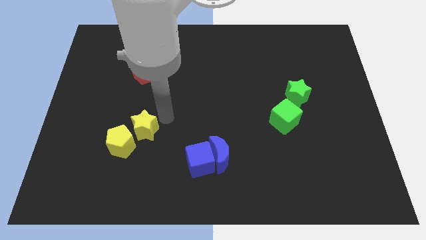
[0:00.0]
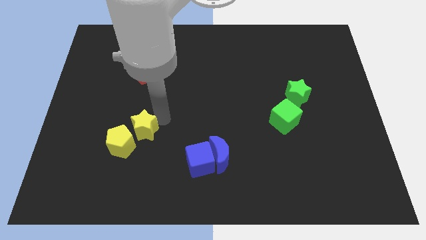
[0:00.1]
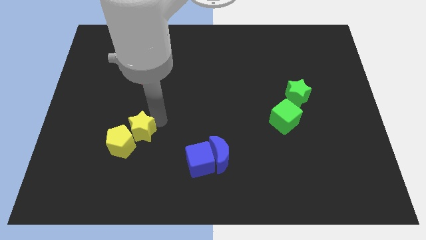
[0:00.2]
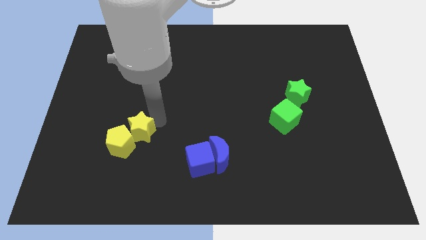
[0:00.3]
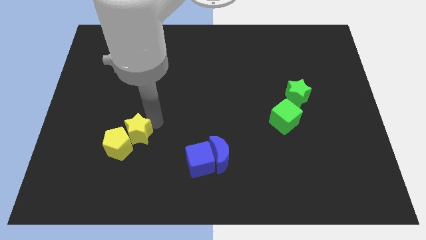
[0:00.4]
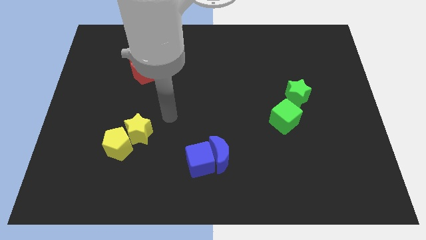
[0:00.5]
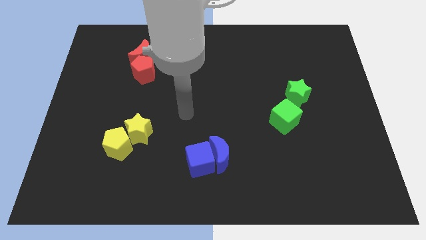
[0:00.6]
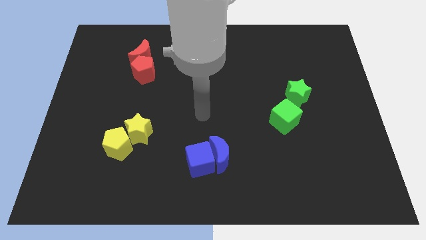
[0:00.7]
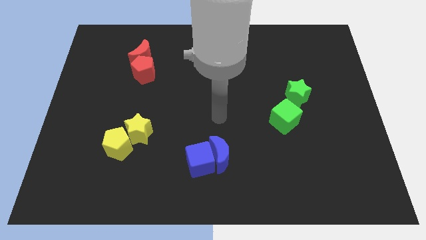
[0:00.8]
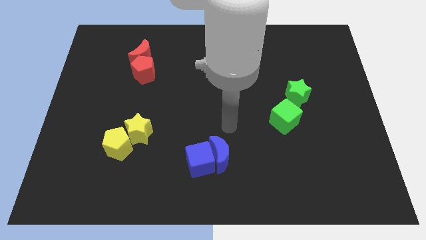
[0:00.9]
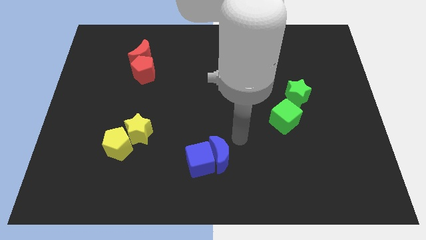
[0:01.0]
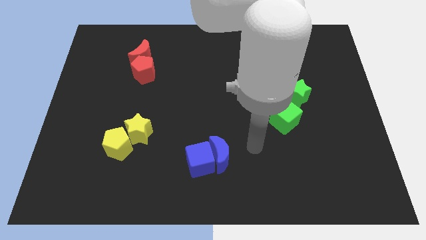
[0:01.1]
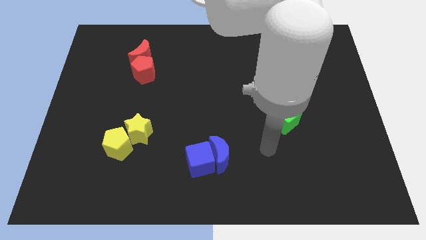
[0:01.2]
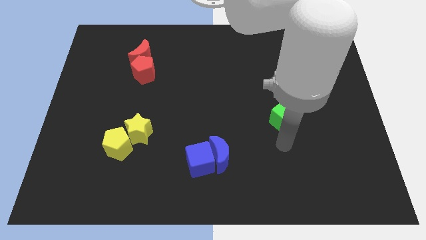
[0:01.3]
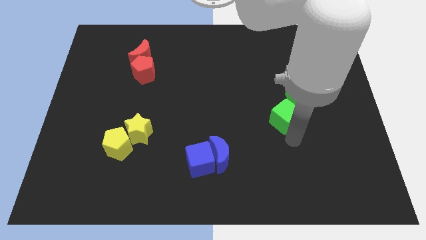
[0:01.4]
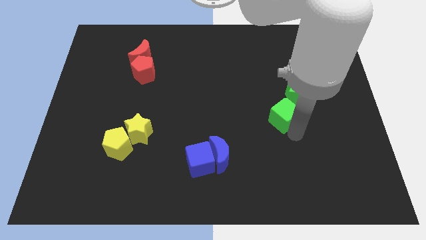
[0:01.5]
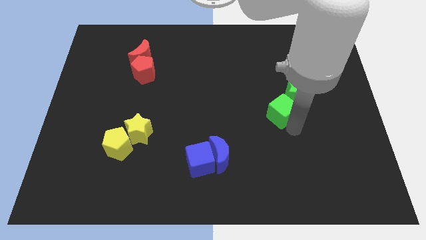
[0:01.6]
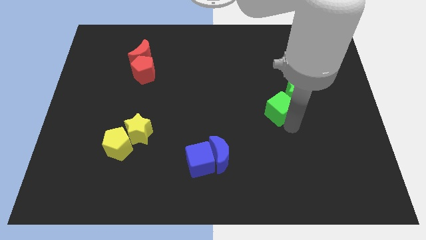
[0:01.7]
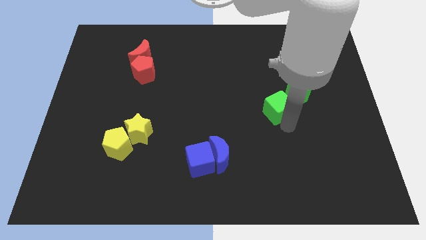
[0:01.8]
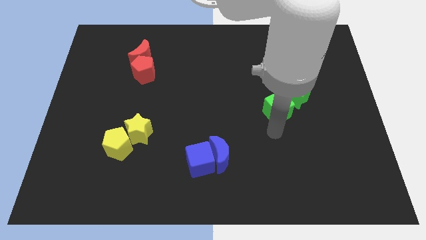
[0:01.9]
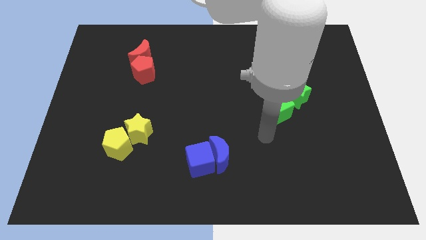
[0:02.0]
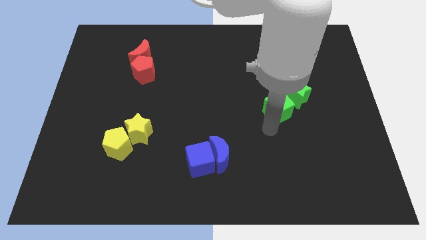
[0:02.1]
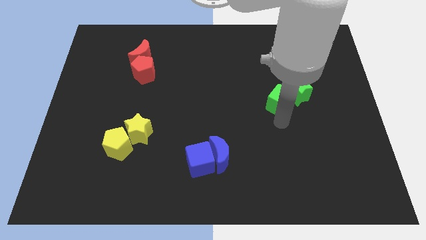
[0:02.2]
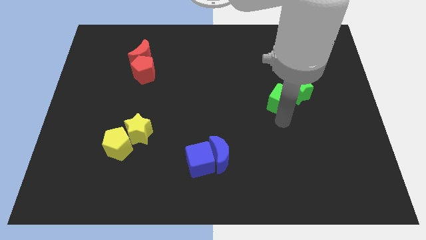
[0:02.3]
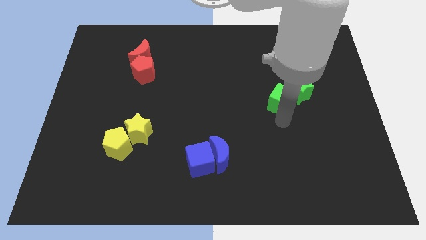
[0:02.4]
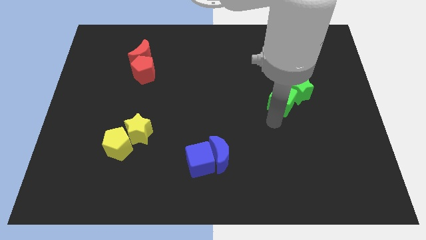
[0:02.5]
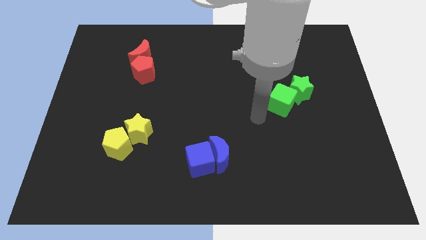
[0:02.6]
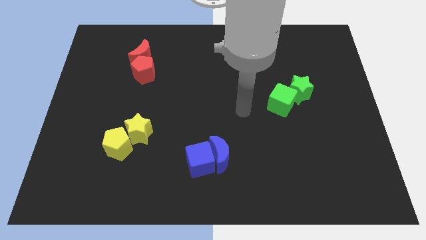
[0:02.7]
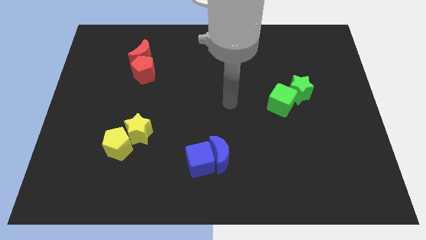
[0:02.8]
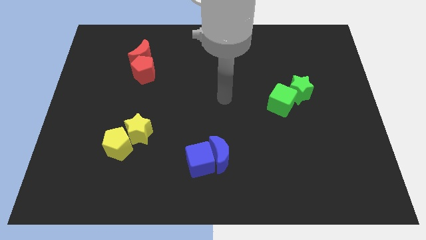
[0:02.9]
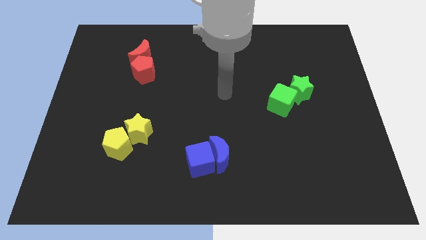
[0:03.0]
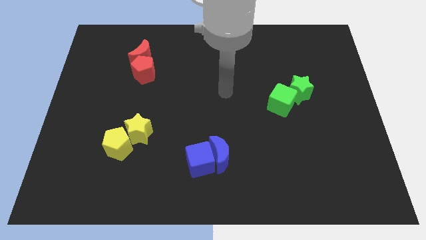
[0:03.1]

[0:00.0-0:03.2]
slide the green cube up slightly

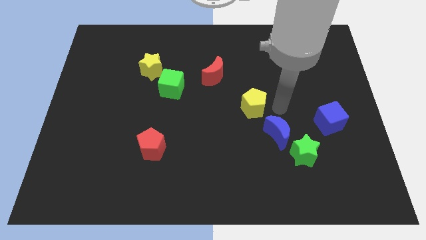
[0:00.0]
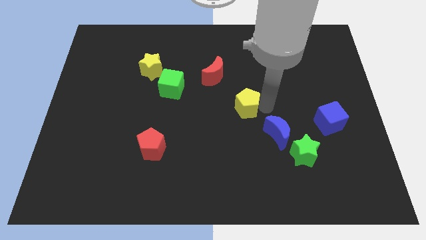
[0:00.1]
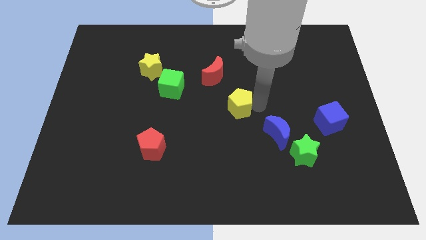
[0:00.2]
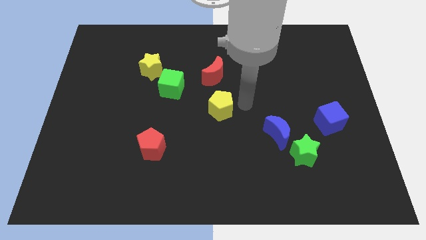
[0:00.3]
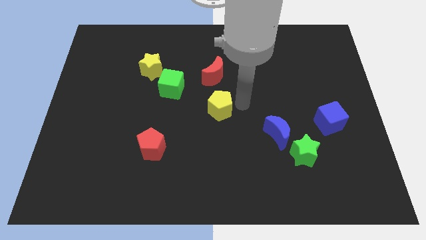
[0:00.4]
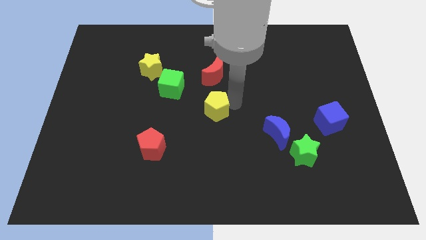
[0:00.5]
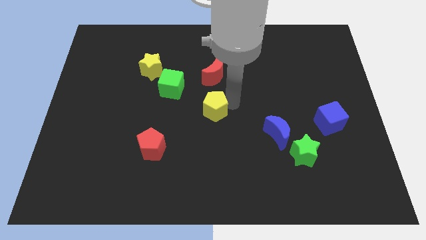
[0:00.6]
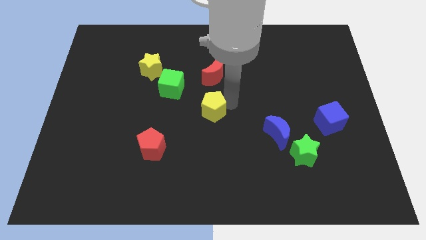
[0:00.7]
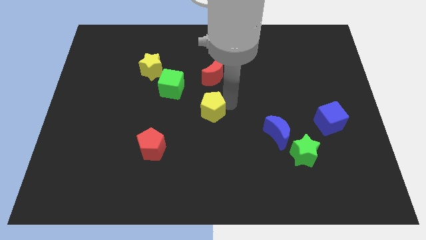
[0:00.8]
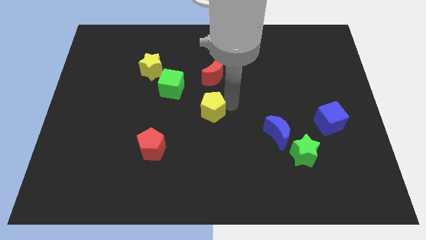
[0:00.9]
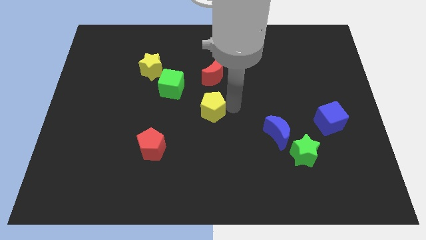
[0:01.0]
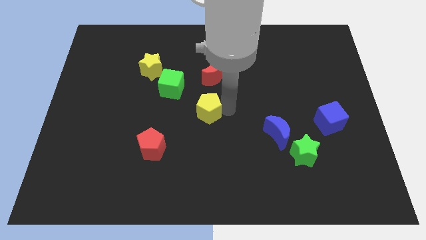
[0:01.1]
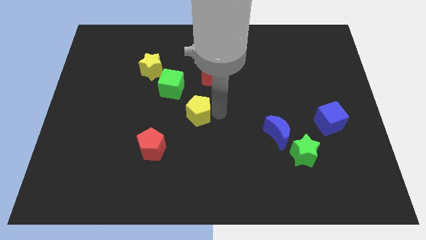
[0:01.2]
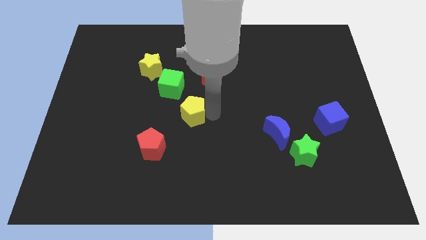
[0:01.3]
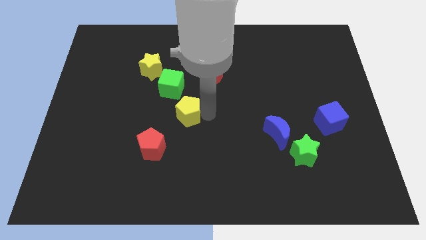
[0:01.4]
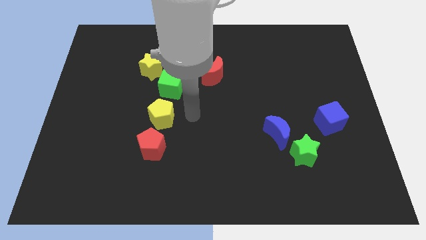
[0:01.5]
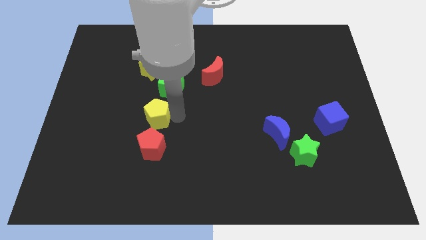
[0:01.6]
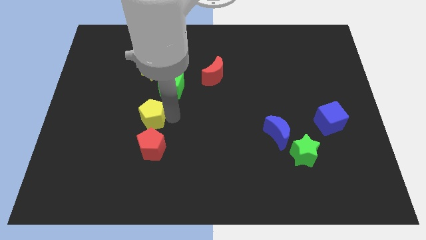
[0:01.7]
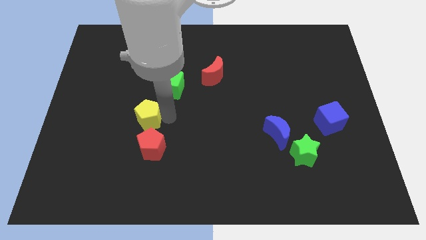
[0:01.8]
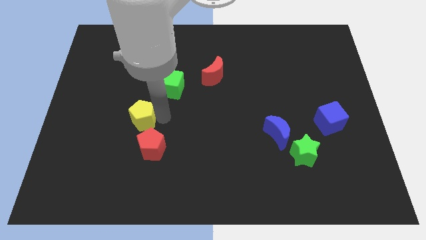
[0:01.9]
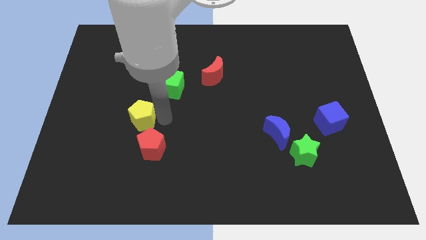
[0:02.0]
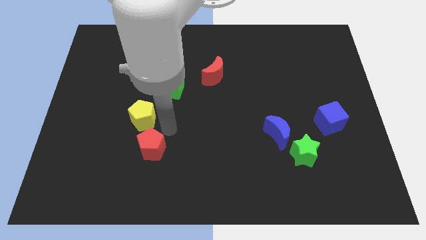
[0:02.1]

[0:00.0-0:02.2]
move the yellow pentagon to the top left side of the red pentagon

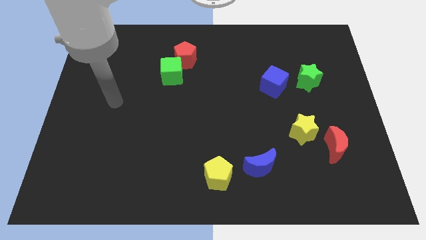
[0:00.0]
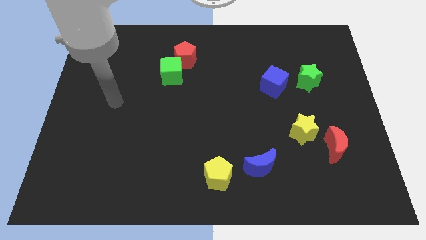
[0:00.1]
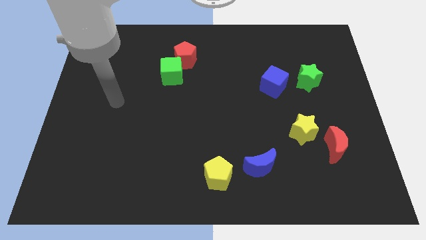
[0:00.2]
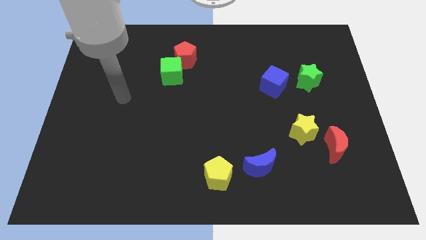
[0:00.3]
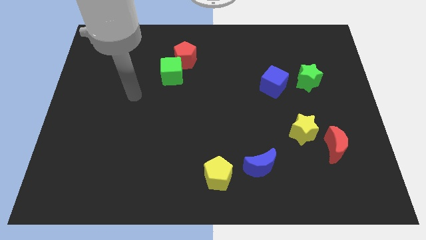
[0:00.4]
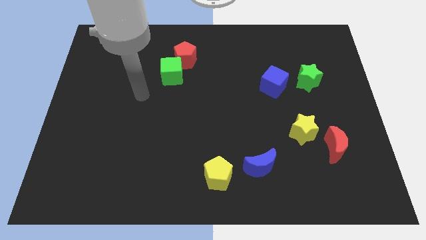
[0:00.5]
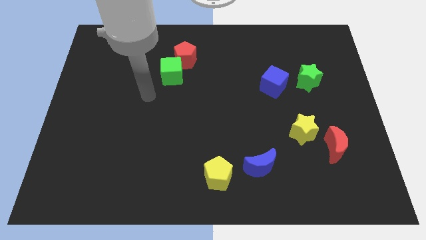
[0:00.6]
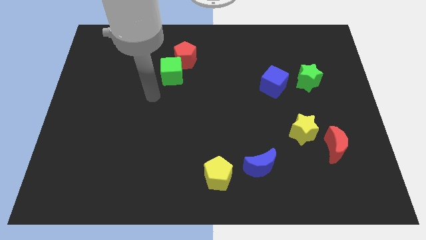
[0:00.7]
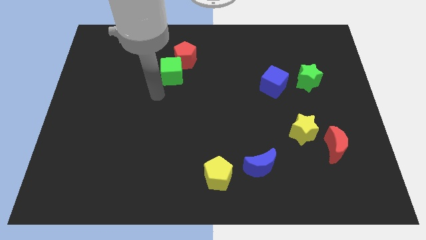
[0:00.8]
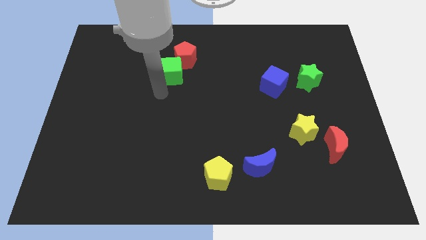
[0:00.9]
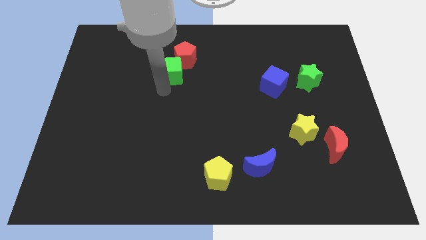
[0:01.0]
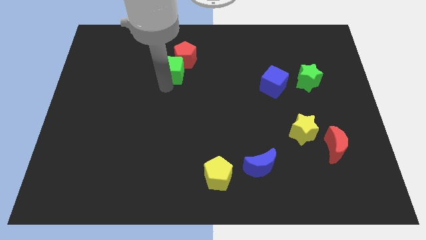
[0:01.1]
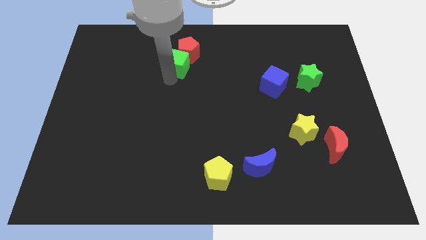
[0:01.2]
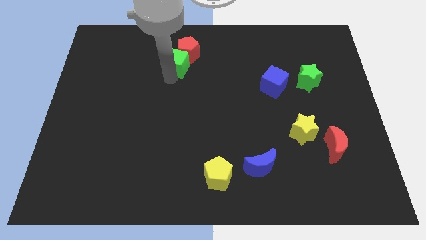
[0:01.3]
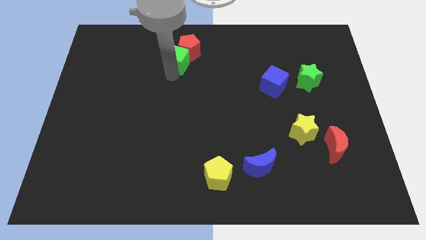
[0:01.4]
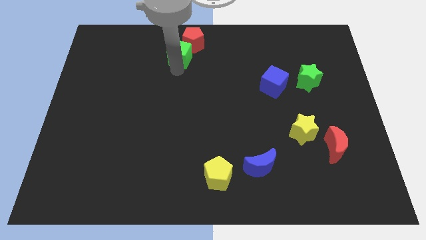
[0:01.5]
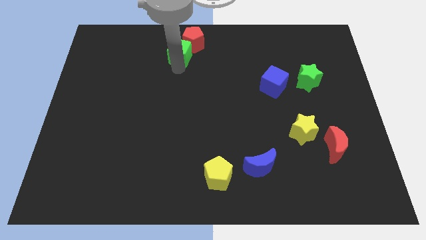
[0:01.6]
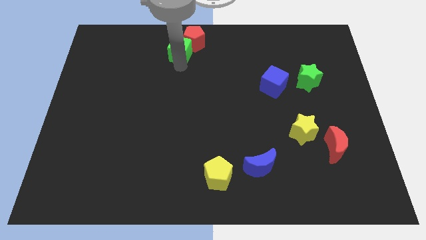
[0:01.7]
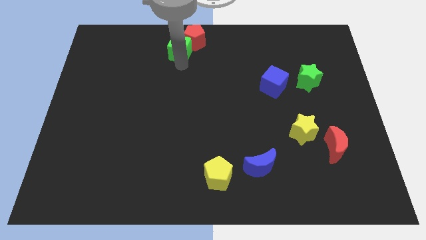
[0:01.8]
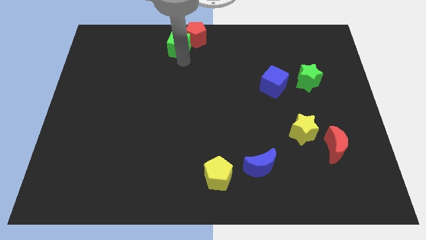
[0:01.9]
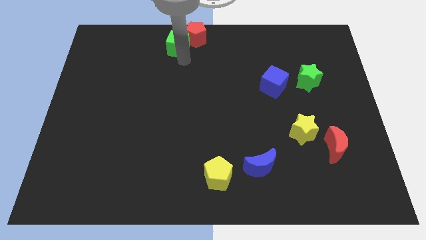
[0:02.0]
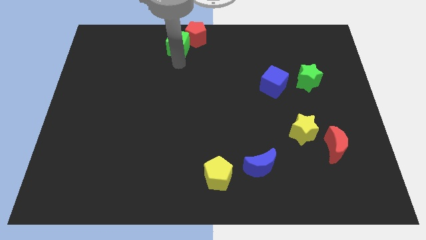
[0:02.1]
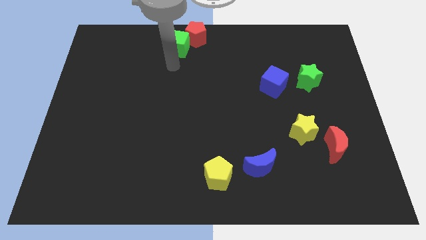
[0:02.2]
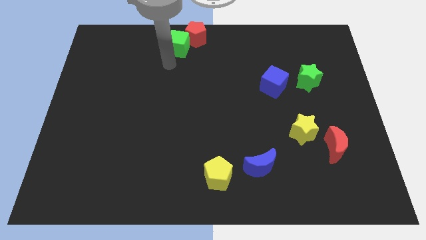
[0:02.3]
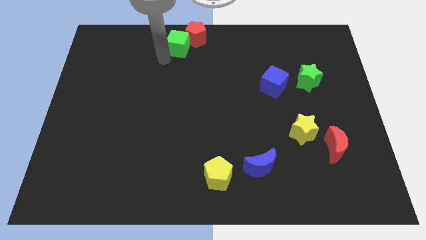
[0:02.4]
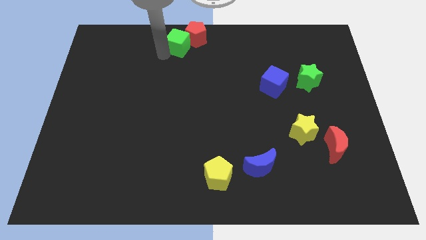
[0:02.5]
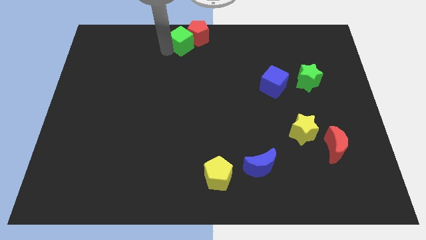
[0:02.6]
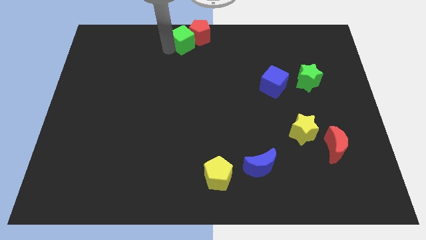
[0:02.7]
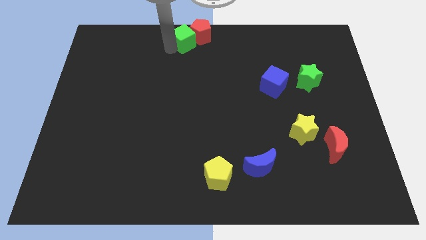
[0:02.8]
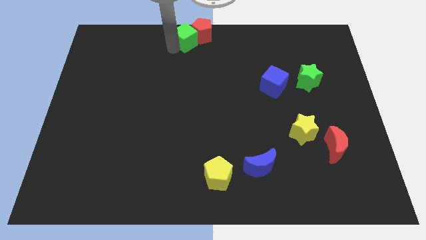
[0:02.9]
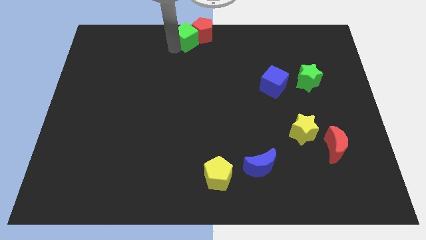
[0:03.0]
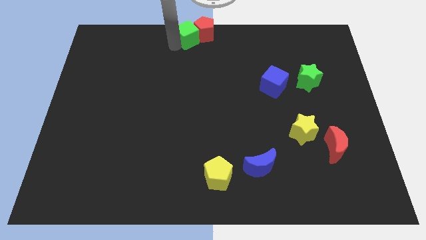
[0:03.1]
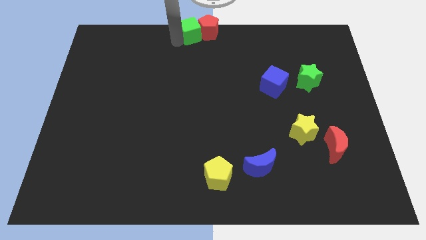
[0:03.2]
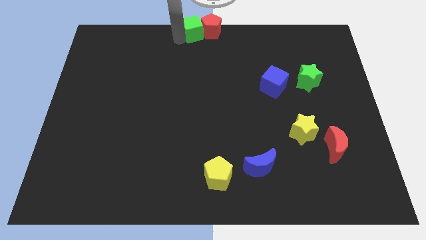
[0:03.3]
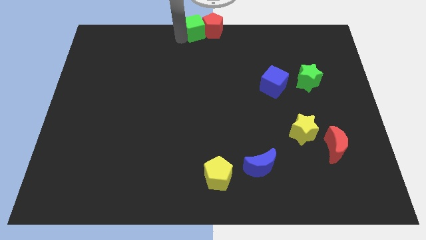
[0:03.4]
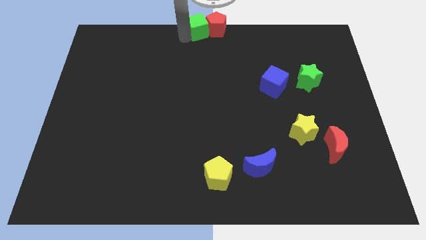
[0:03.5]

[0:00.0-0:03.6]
push green cube with red pentagon towards top middle of the board
